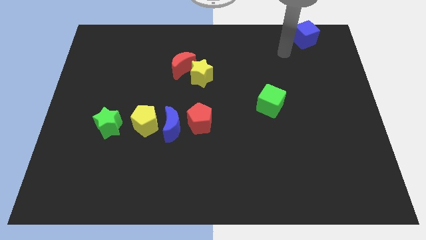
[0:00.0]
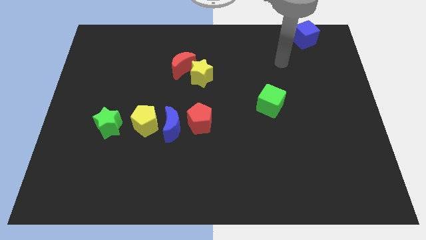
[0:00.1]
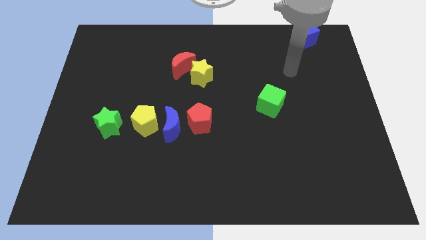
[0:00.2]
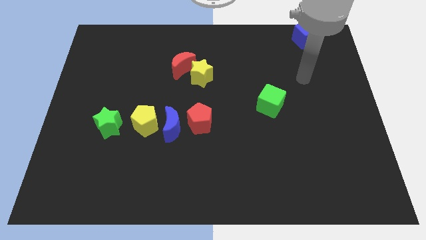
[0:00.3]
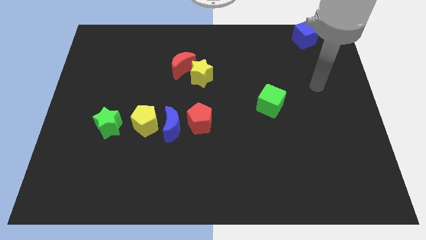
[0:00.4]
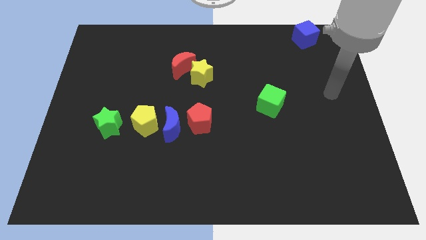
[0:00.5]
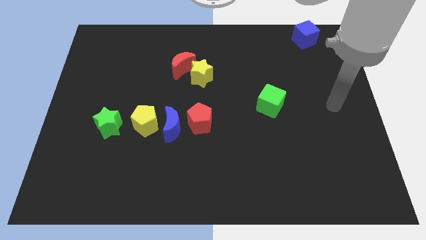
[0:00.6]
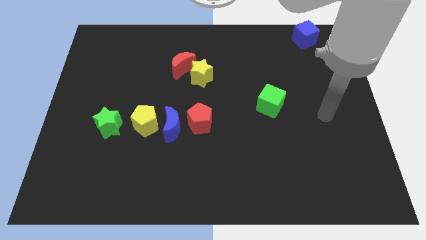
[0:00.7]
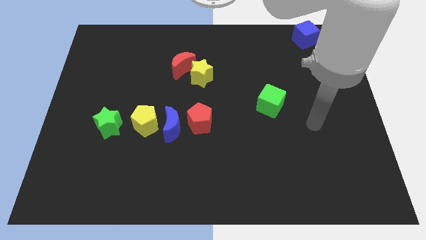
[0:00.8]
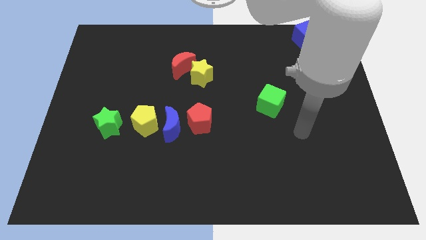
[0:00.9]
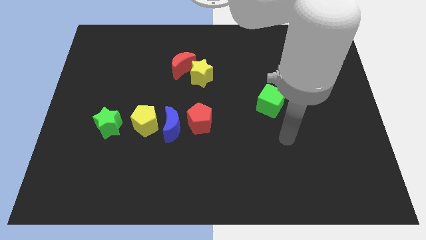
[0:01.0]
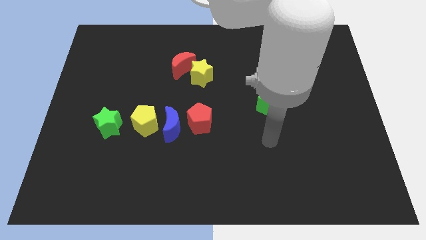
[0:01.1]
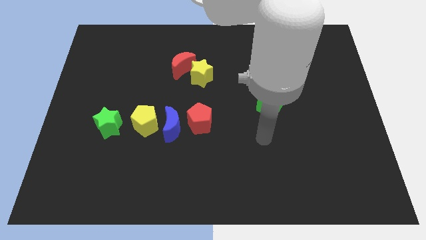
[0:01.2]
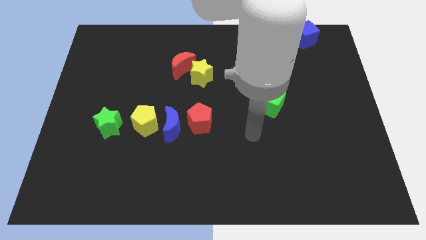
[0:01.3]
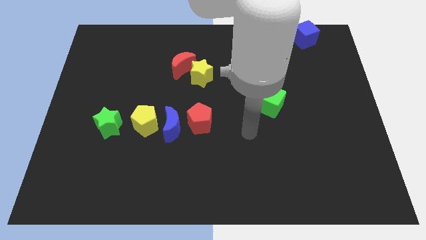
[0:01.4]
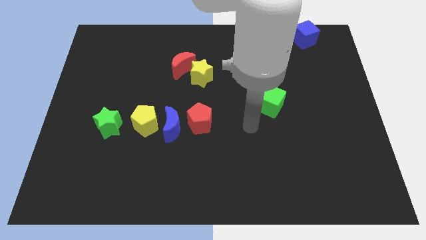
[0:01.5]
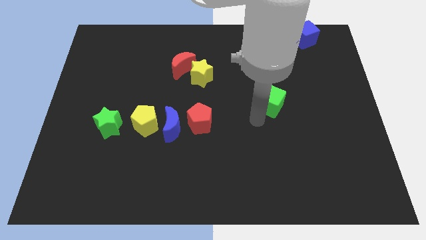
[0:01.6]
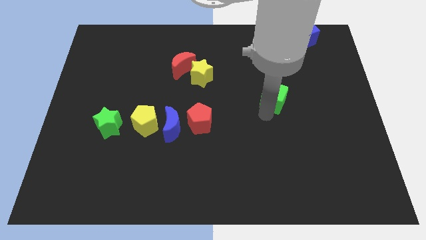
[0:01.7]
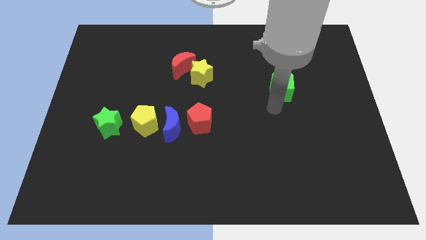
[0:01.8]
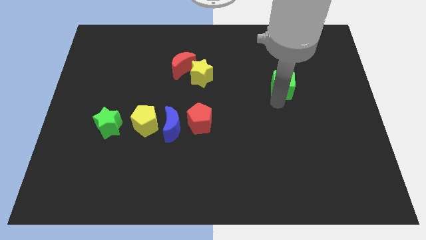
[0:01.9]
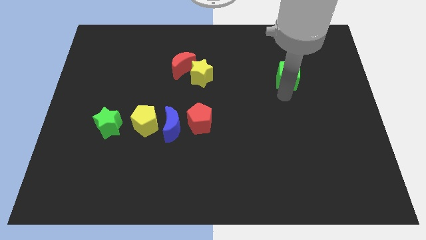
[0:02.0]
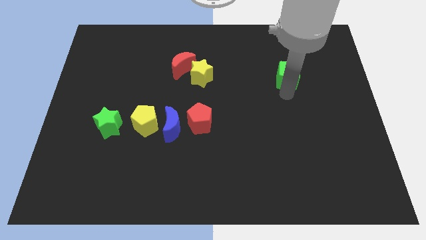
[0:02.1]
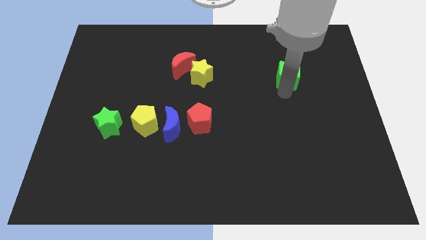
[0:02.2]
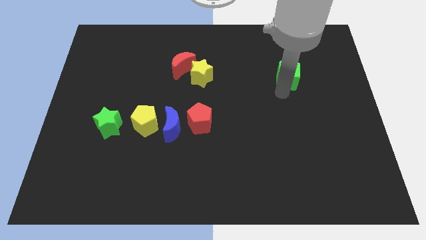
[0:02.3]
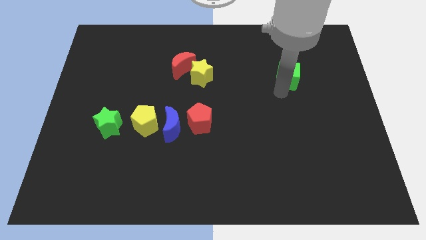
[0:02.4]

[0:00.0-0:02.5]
place the green cube horizontally to the right of the yellow star

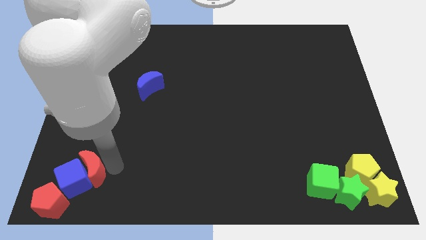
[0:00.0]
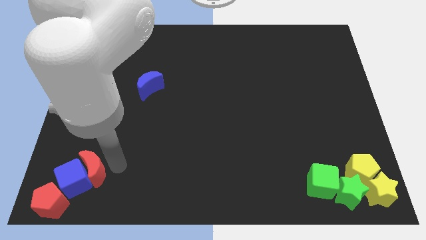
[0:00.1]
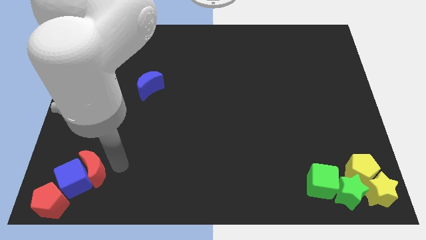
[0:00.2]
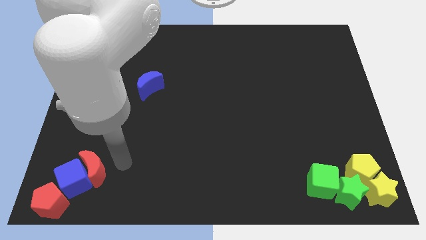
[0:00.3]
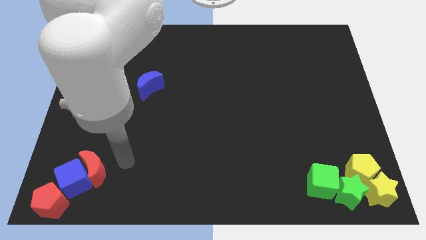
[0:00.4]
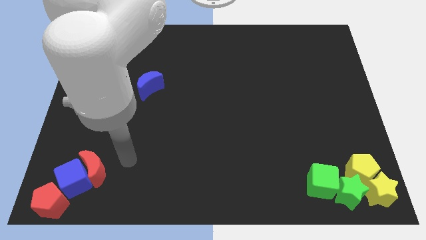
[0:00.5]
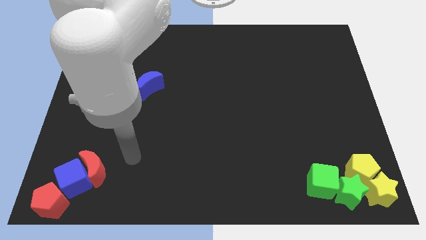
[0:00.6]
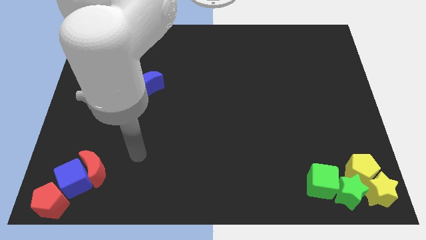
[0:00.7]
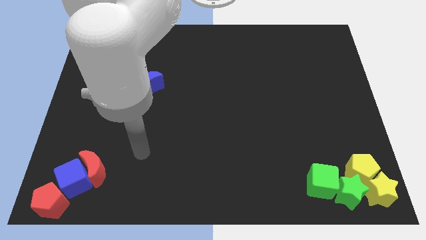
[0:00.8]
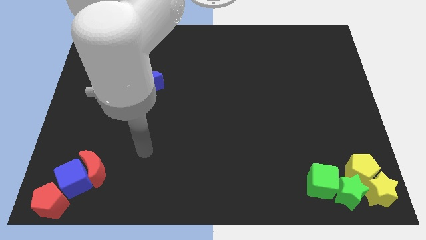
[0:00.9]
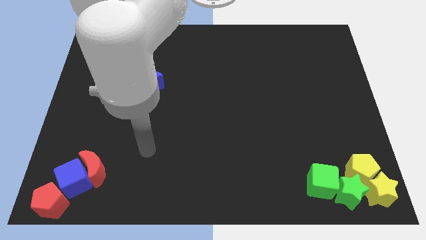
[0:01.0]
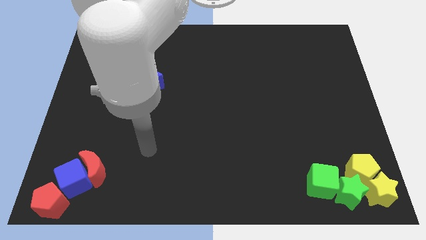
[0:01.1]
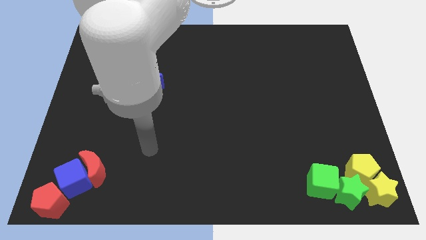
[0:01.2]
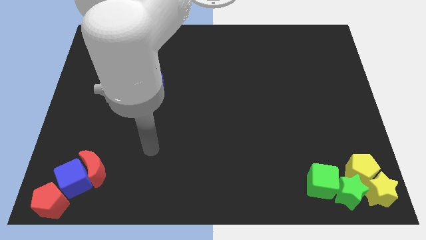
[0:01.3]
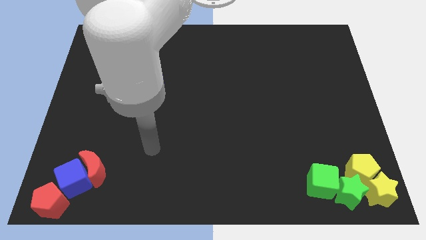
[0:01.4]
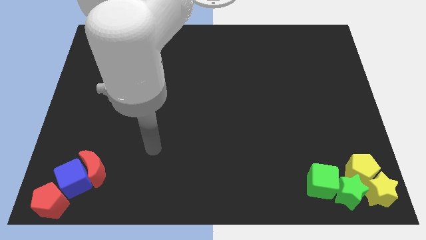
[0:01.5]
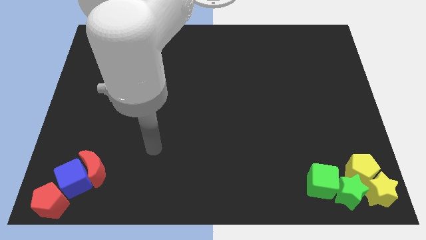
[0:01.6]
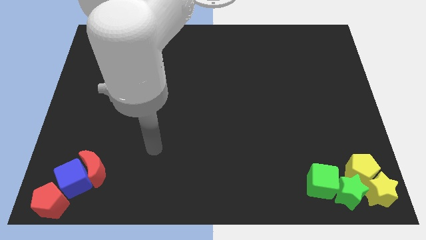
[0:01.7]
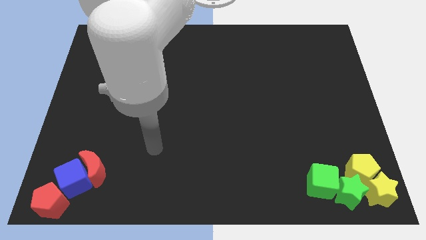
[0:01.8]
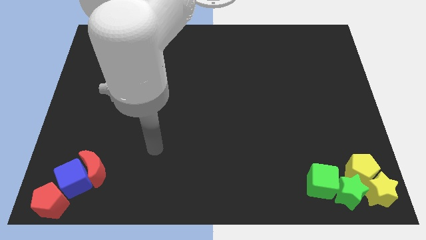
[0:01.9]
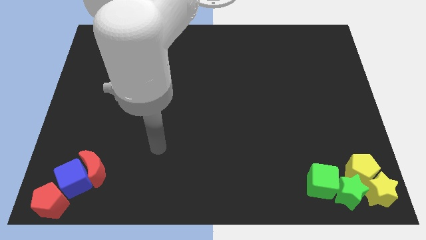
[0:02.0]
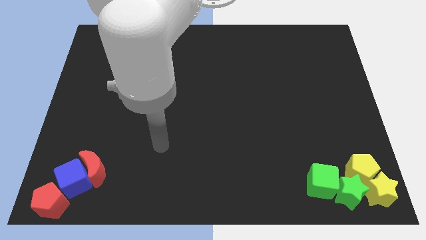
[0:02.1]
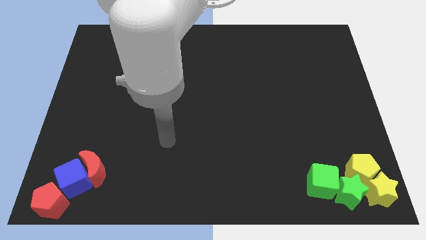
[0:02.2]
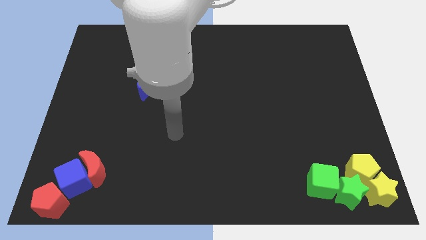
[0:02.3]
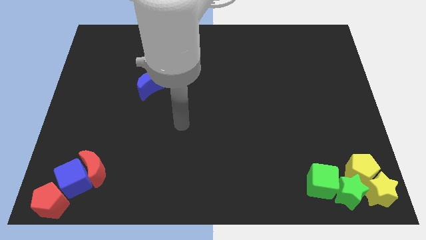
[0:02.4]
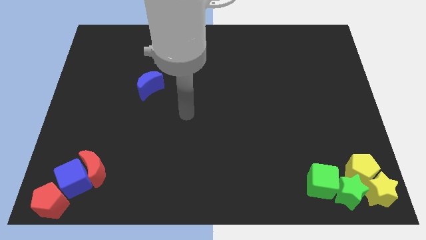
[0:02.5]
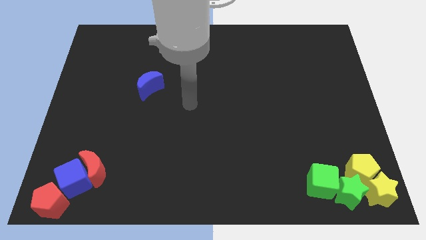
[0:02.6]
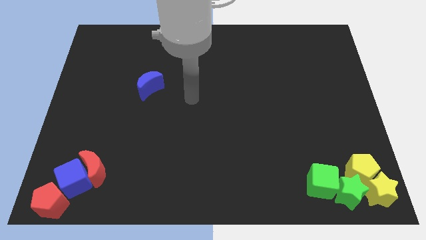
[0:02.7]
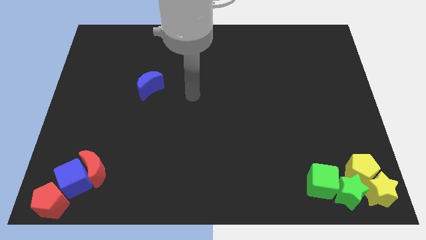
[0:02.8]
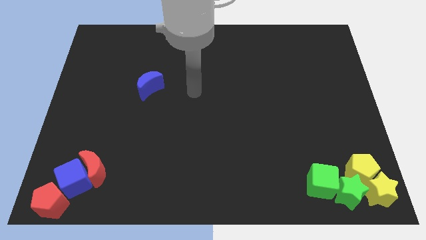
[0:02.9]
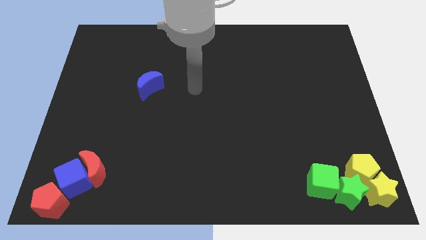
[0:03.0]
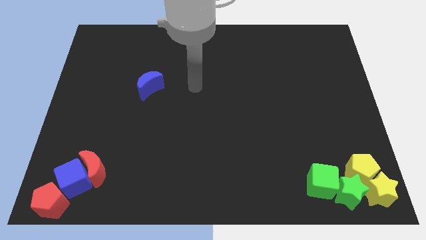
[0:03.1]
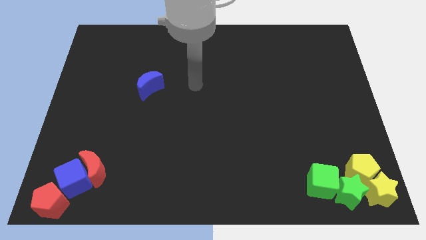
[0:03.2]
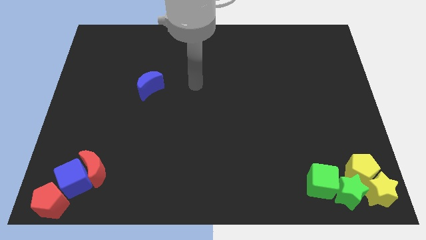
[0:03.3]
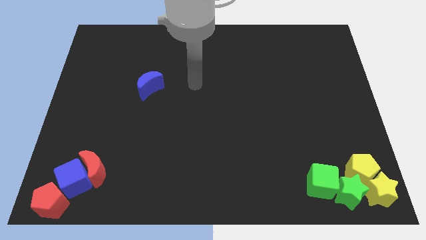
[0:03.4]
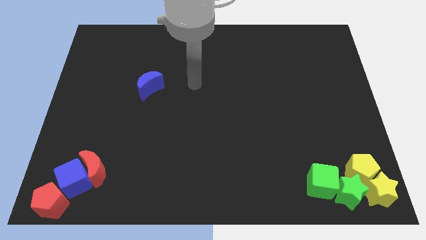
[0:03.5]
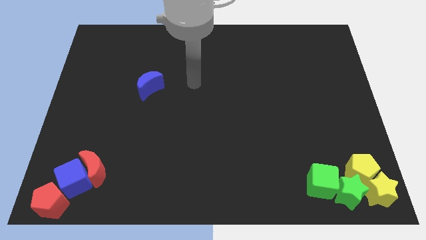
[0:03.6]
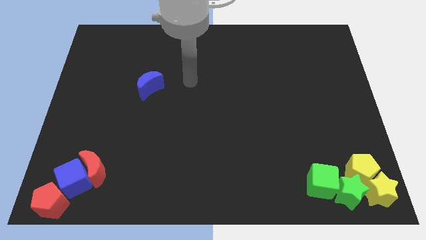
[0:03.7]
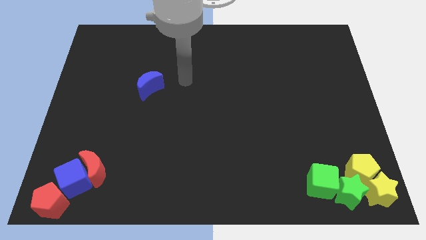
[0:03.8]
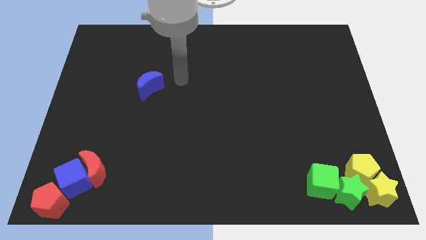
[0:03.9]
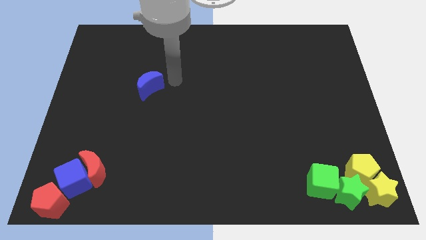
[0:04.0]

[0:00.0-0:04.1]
point your arm at the top right of the blue crescent

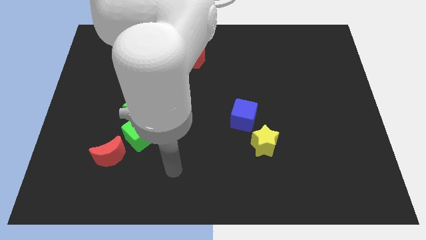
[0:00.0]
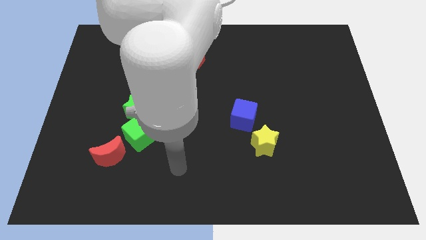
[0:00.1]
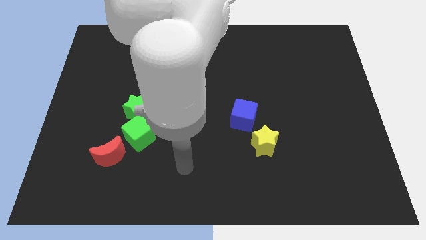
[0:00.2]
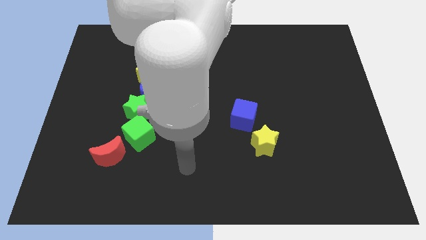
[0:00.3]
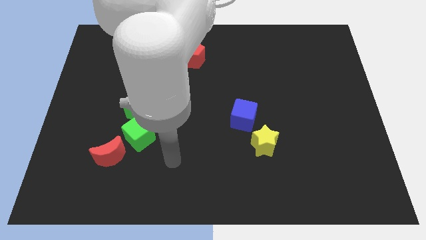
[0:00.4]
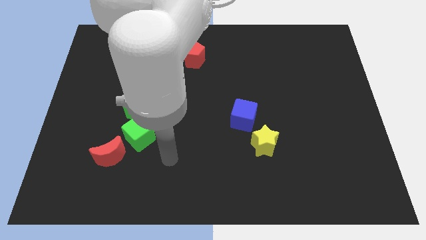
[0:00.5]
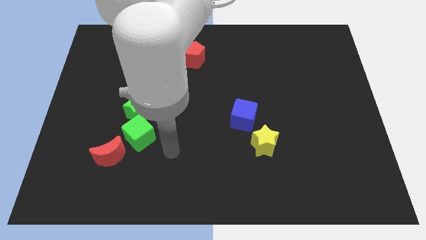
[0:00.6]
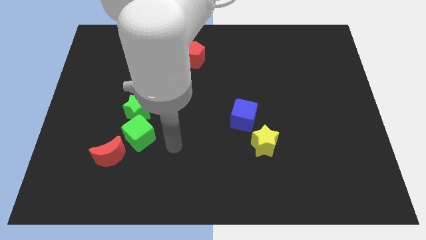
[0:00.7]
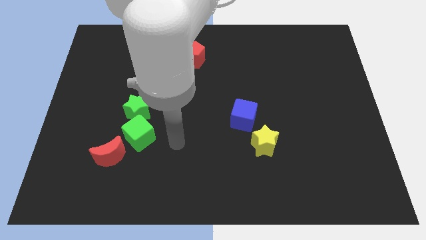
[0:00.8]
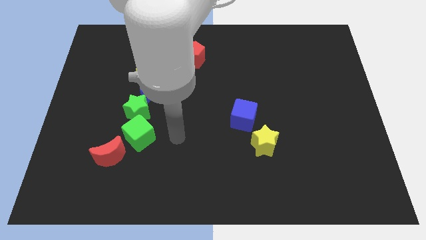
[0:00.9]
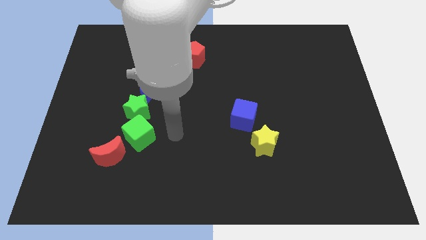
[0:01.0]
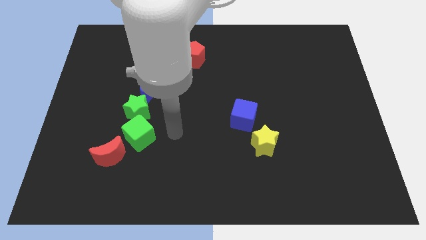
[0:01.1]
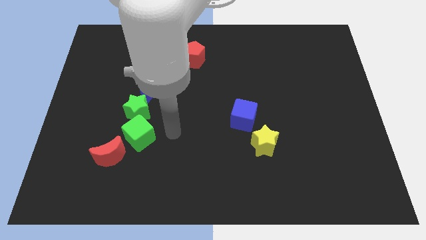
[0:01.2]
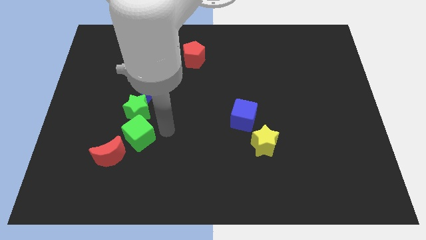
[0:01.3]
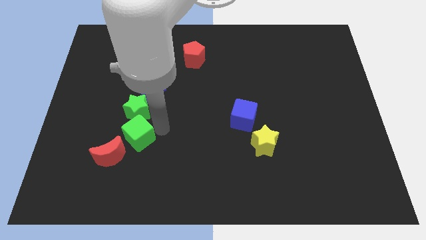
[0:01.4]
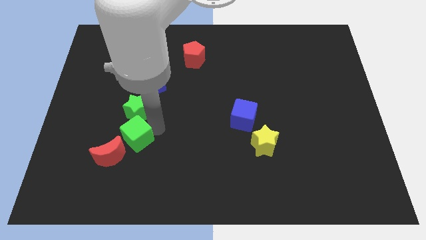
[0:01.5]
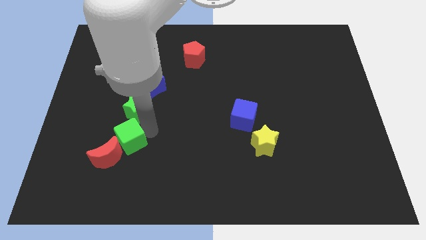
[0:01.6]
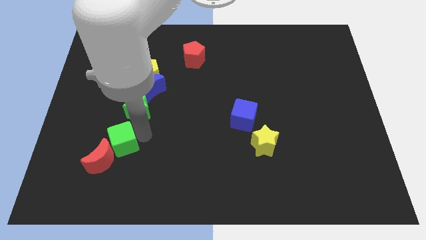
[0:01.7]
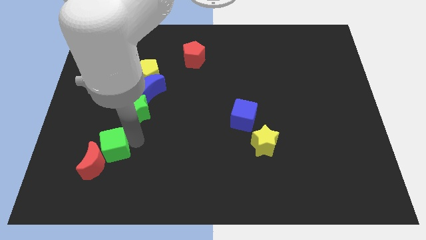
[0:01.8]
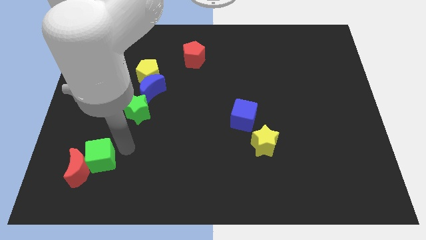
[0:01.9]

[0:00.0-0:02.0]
push the green cube into the red moon

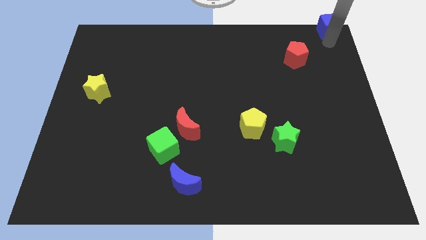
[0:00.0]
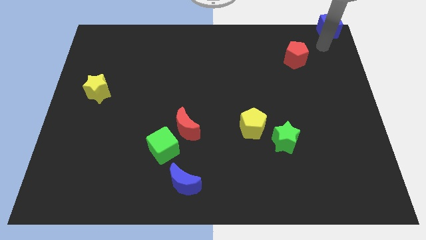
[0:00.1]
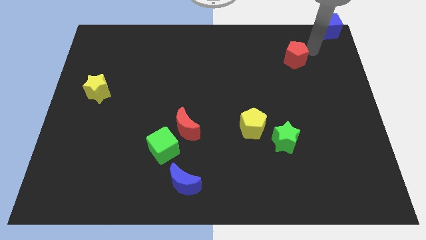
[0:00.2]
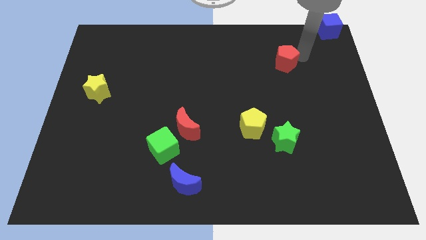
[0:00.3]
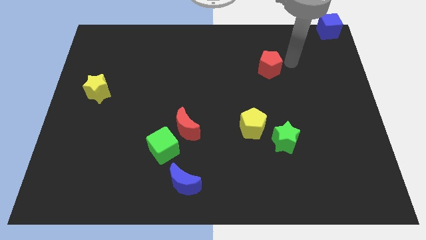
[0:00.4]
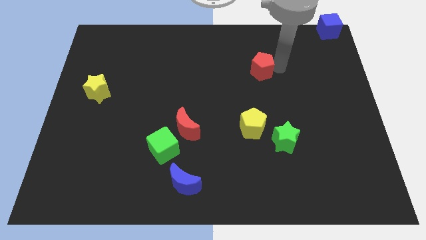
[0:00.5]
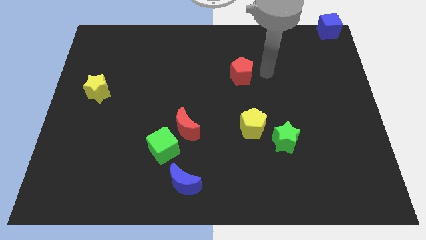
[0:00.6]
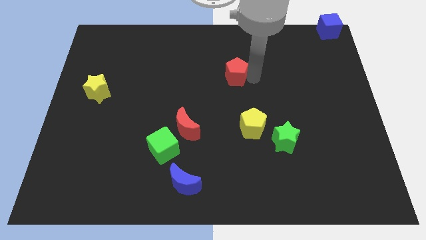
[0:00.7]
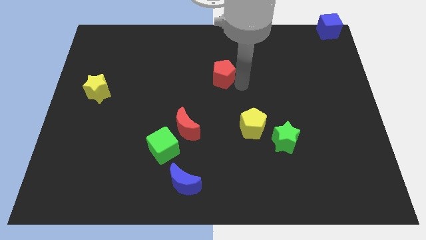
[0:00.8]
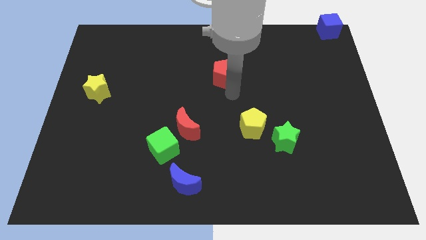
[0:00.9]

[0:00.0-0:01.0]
slide the red pentagon to the center of the board
